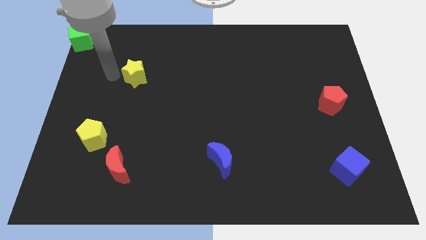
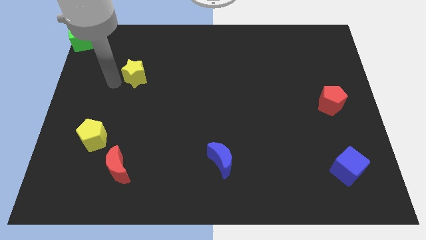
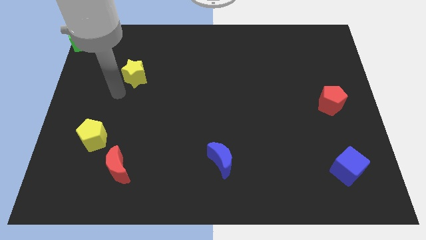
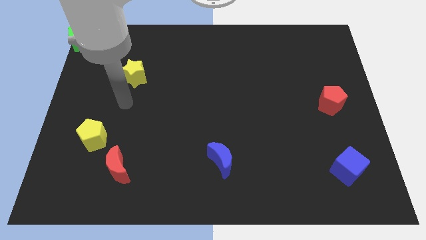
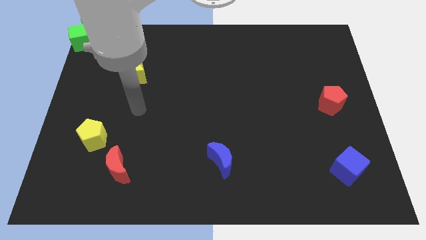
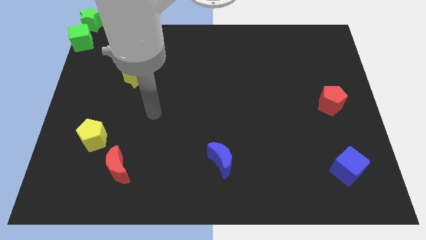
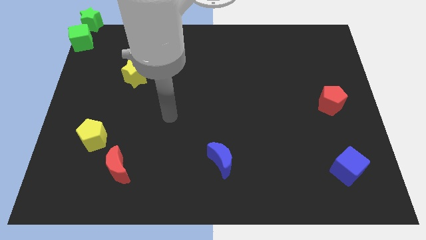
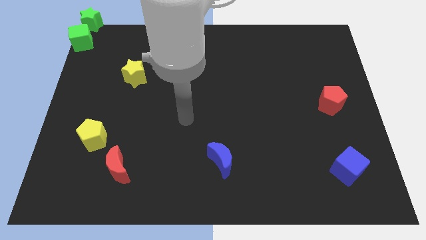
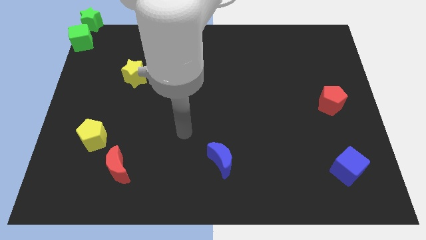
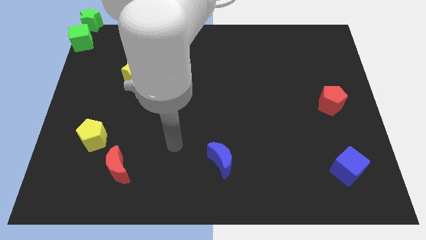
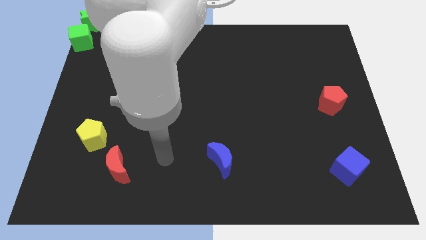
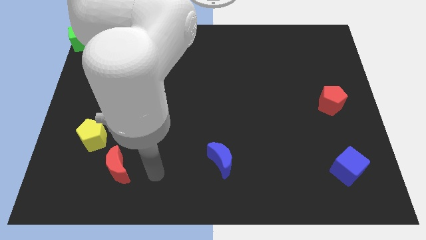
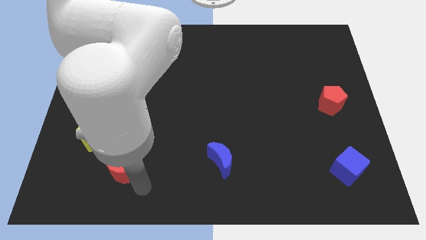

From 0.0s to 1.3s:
move your arm towards the red crescent

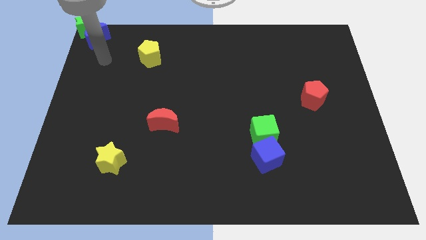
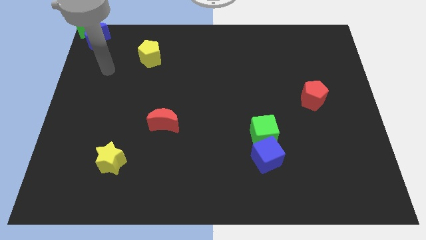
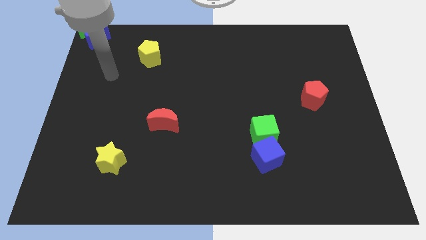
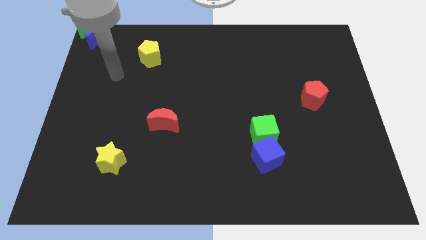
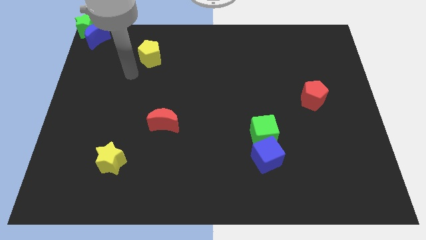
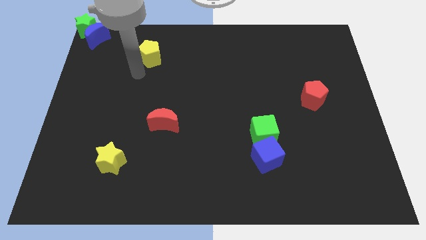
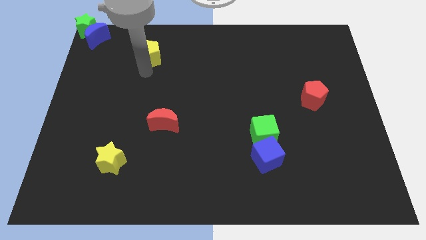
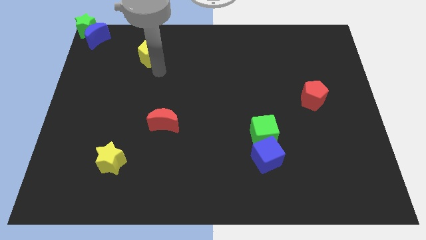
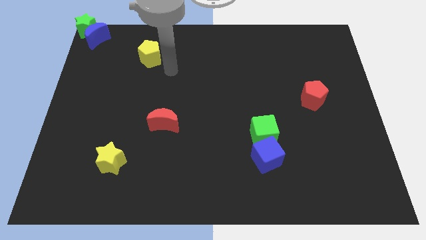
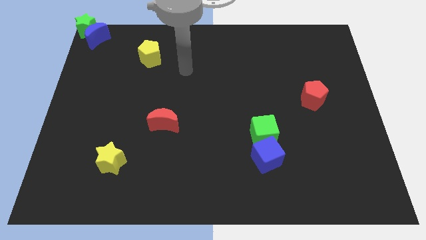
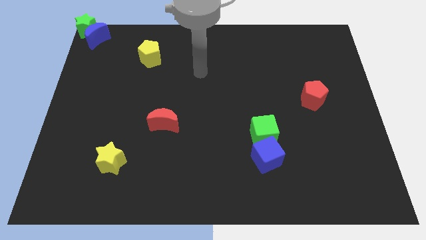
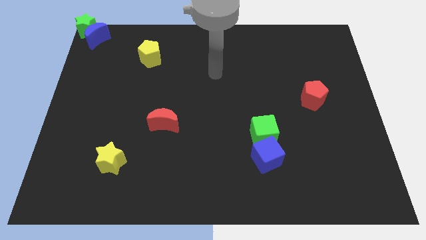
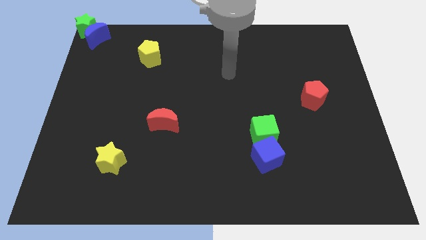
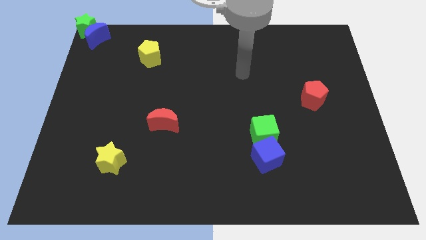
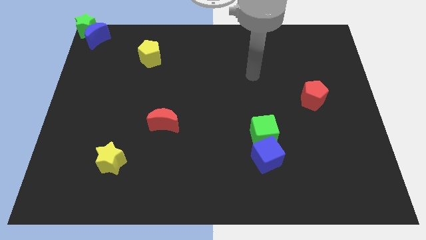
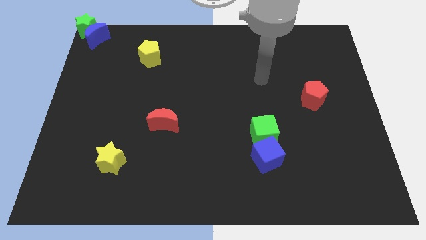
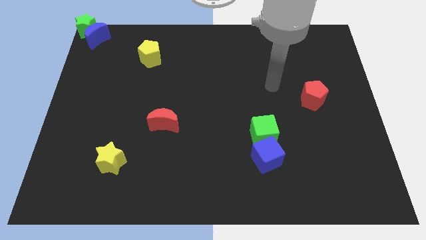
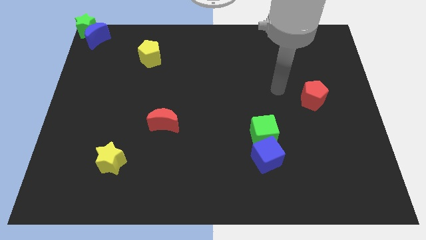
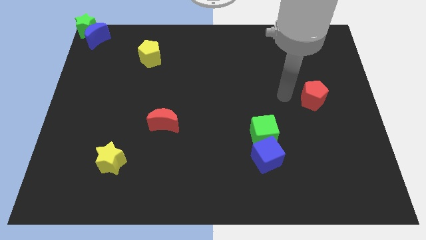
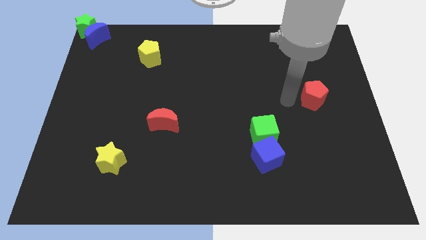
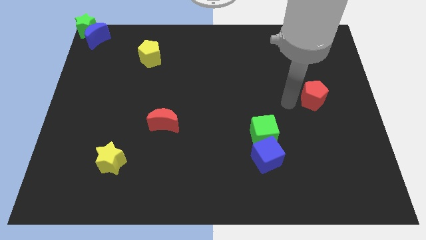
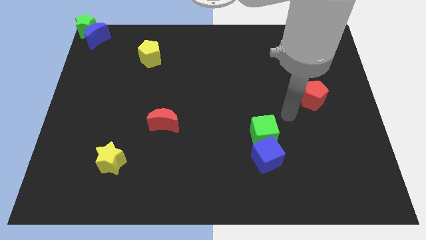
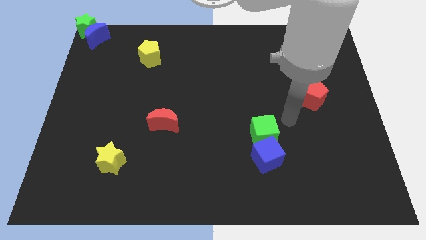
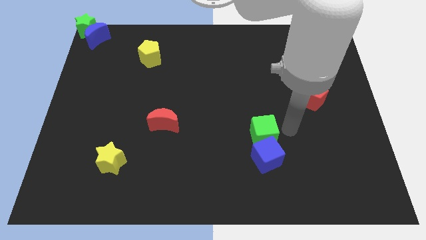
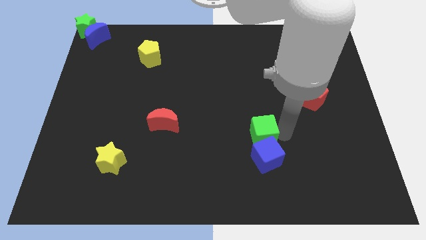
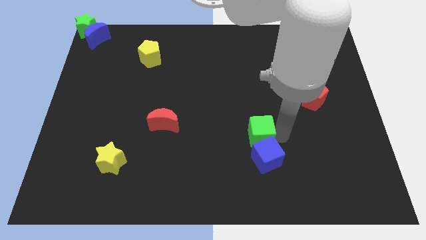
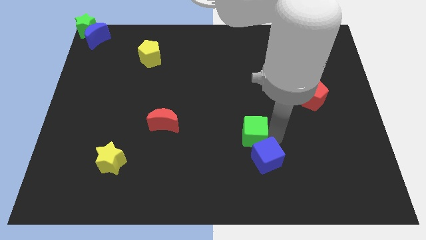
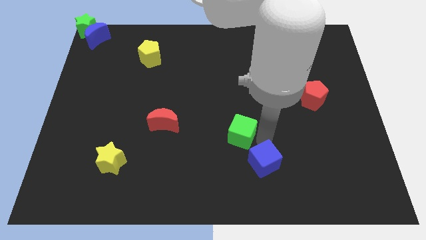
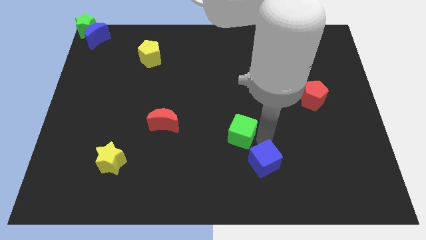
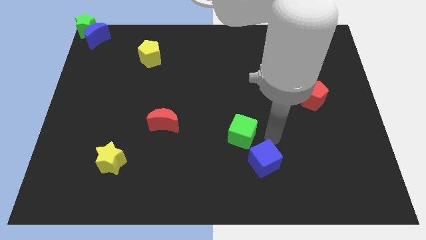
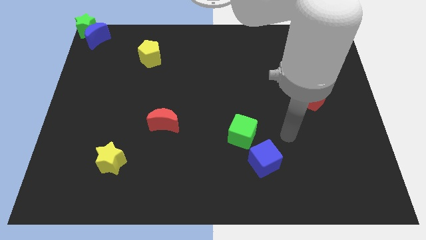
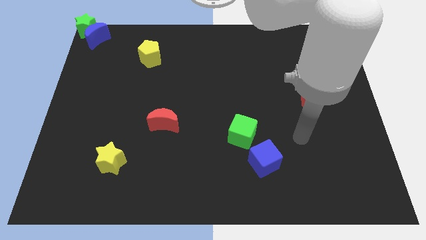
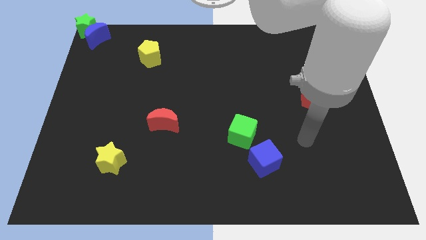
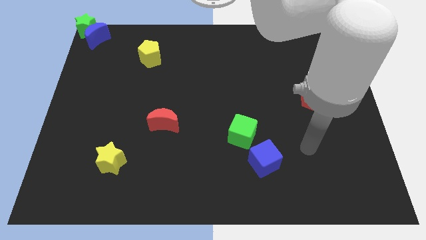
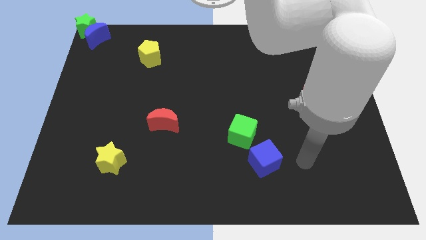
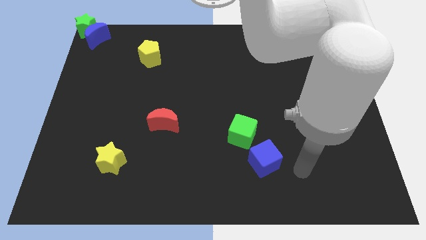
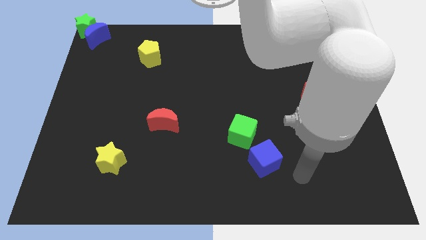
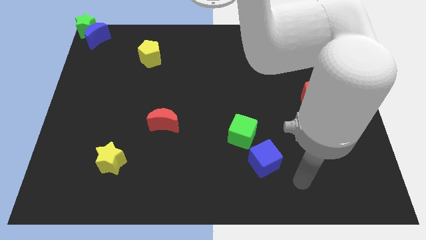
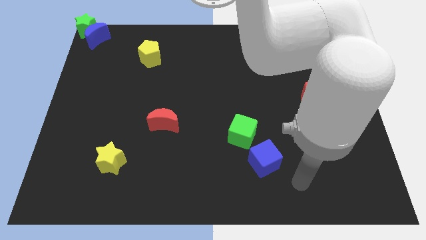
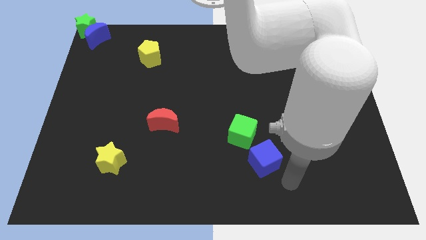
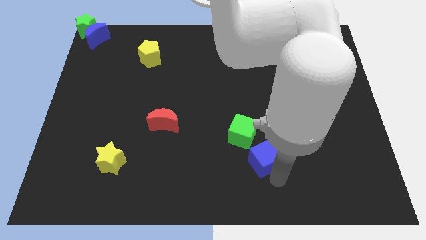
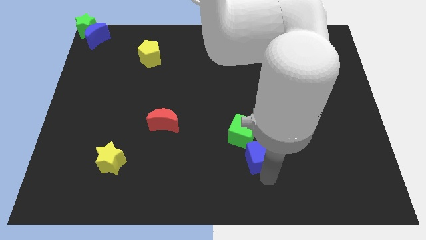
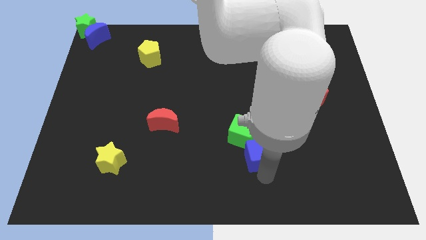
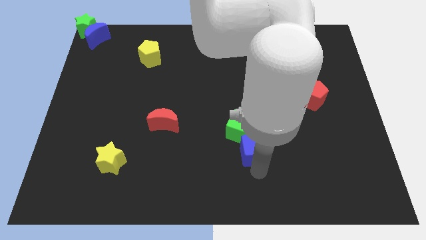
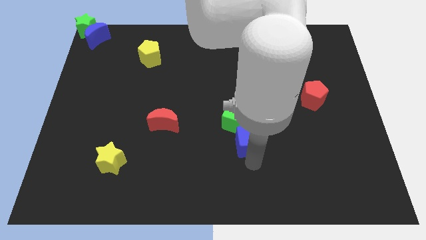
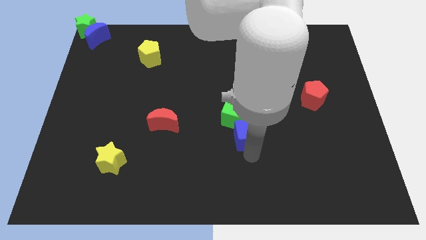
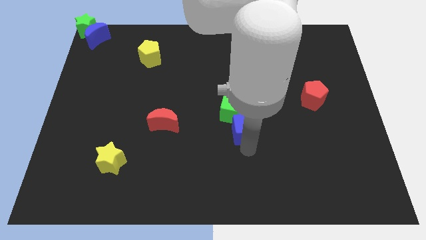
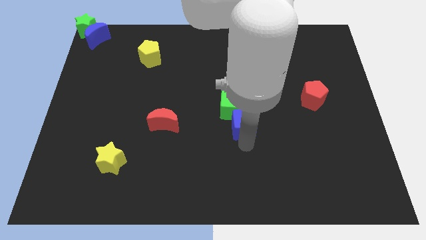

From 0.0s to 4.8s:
move the blue cube and green cube to the center of the board

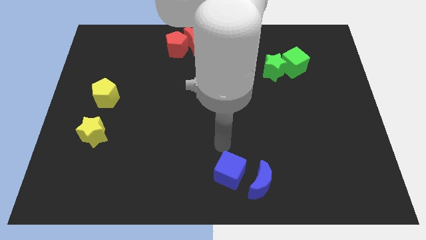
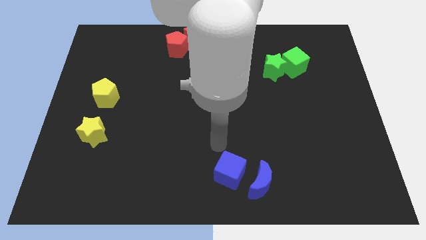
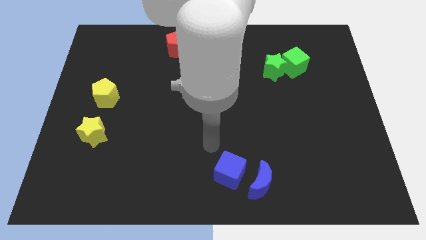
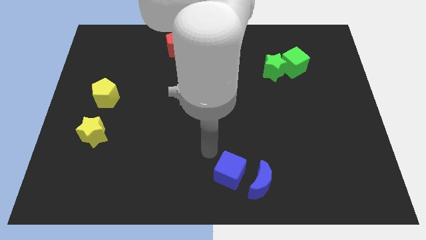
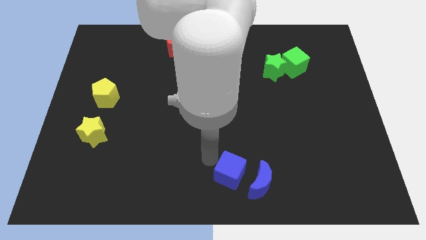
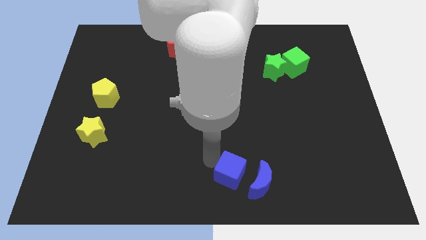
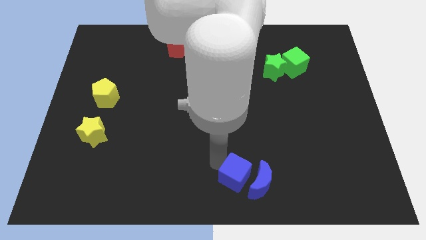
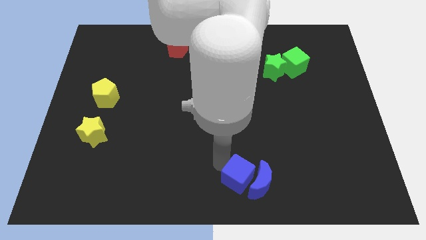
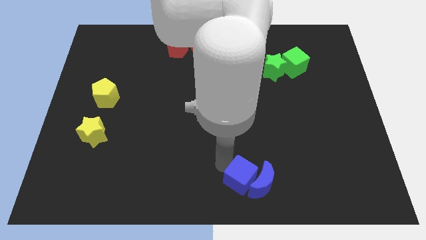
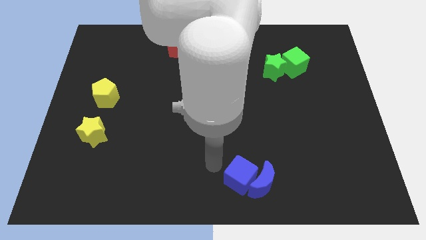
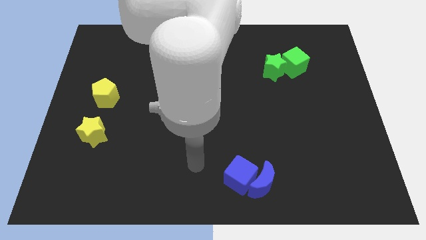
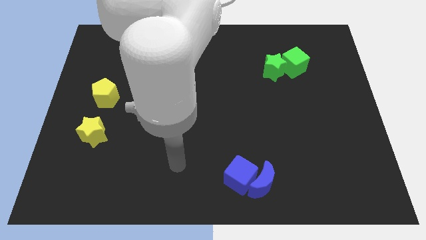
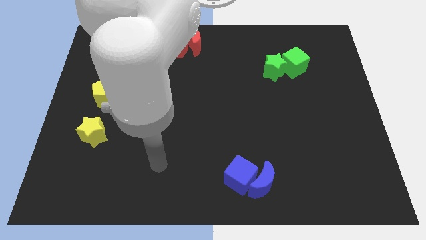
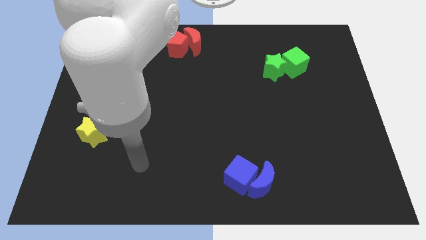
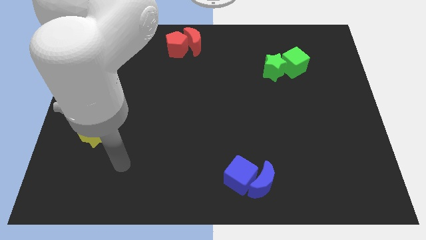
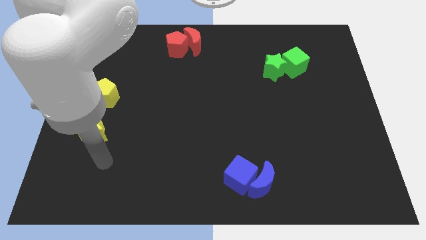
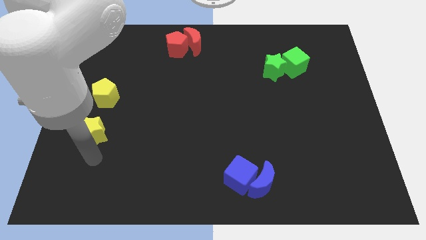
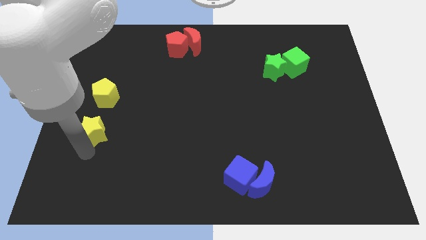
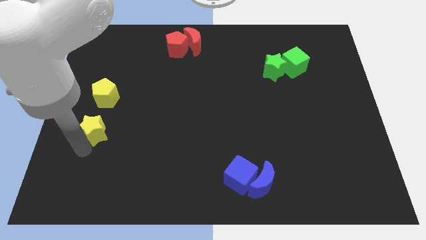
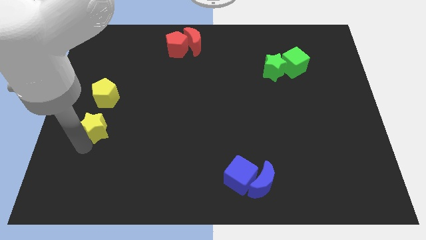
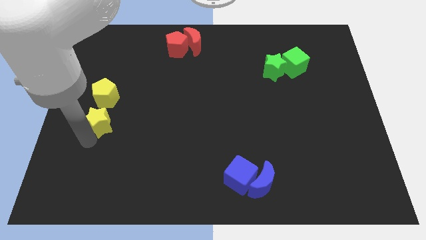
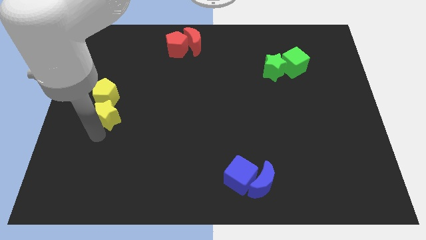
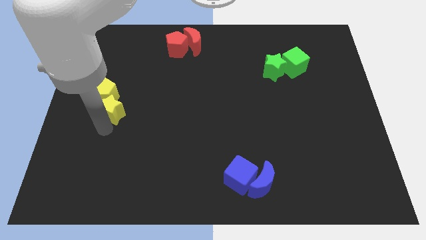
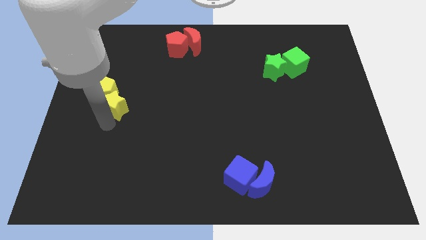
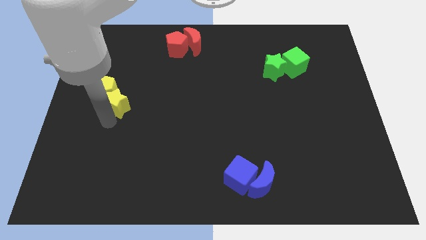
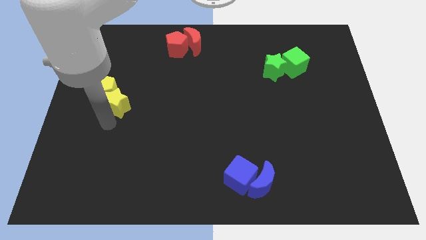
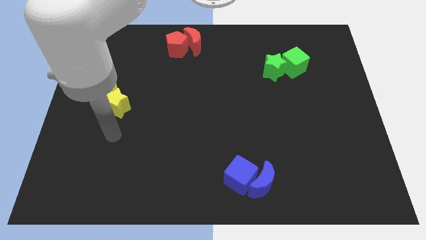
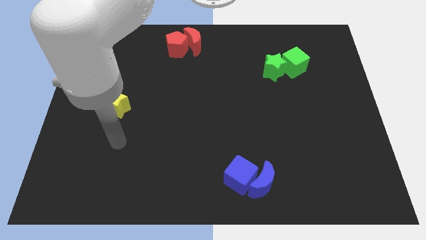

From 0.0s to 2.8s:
push the blue cube to blue moon and yellow star to yellow pentagon

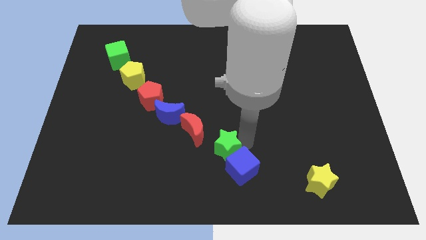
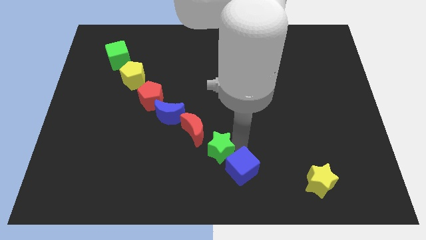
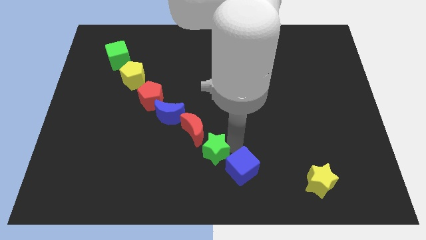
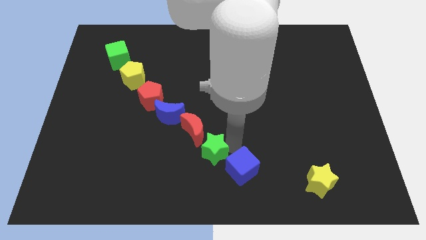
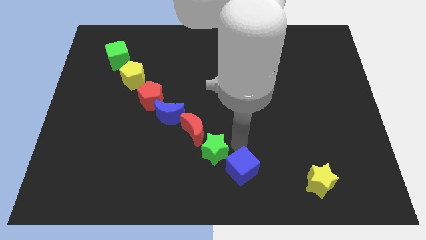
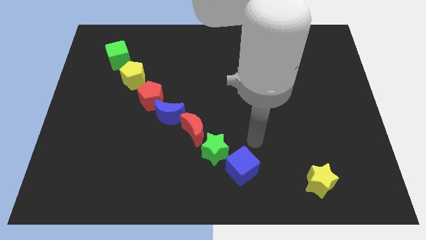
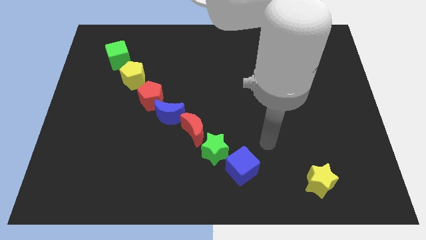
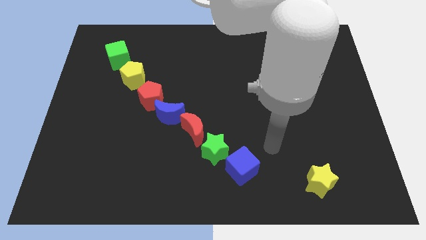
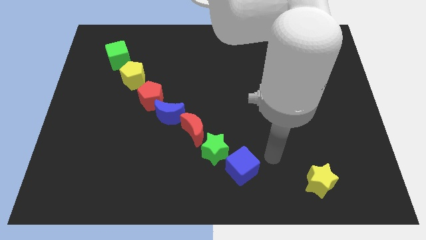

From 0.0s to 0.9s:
place the green star to the left bottom of the the red crescent
